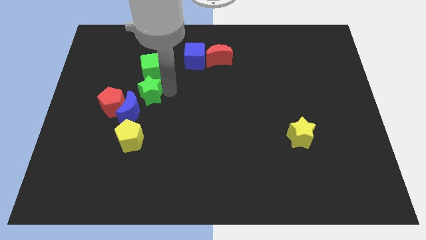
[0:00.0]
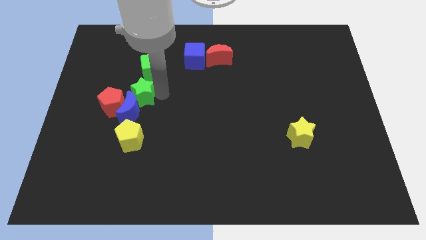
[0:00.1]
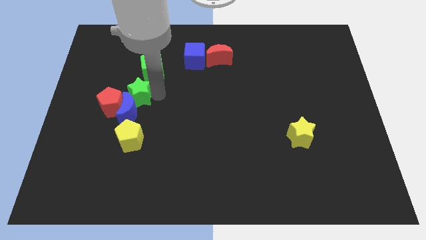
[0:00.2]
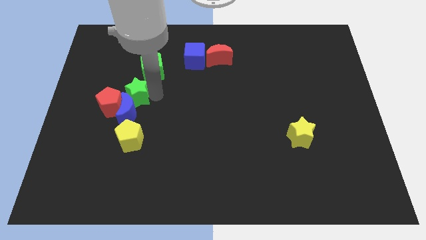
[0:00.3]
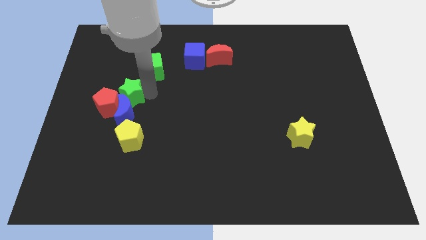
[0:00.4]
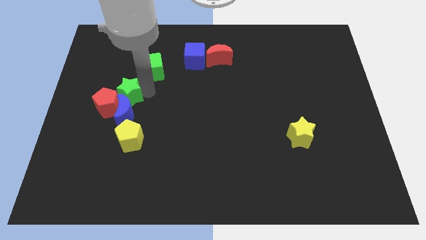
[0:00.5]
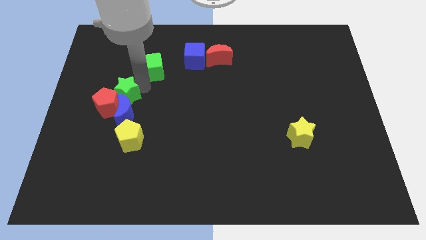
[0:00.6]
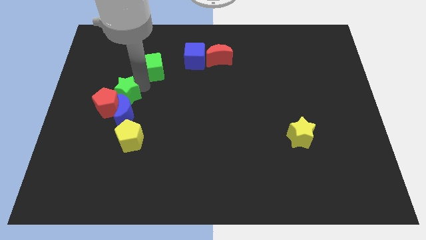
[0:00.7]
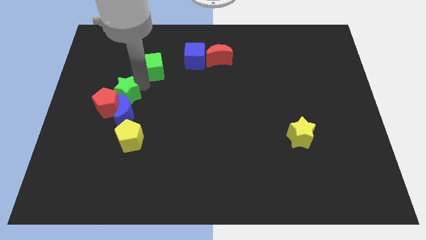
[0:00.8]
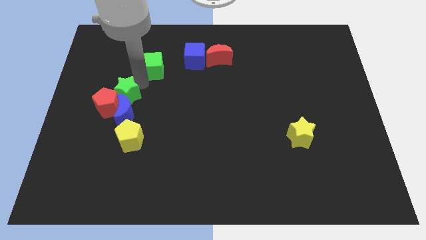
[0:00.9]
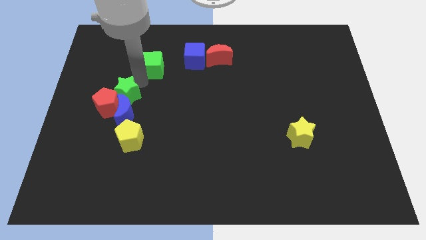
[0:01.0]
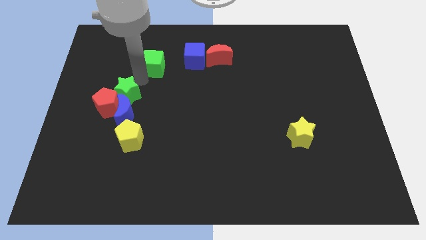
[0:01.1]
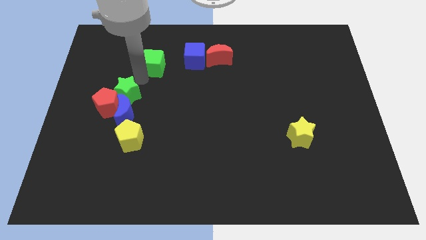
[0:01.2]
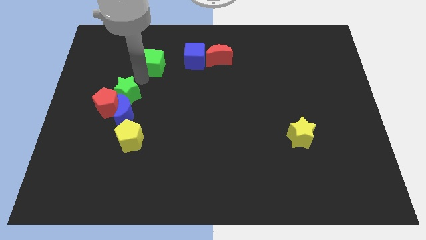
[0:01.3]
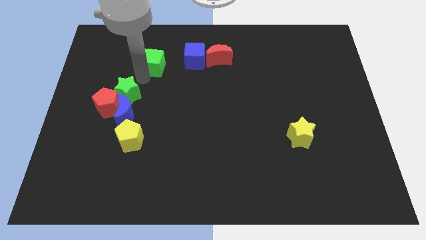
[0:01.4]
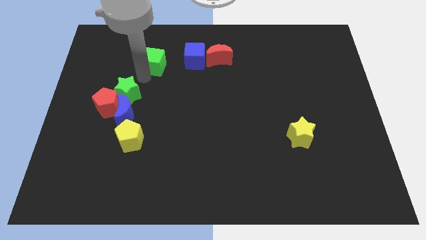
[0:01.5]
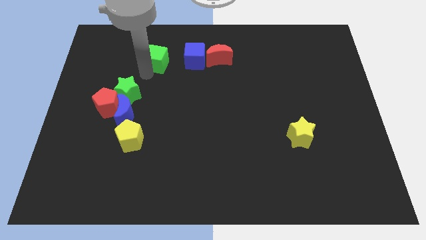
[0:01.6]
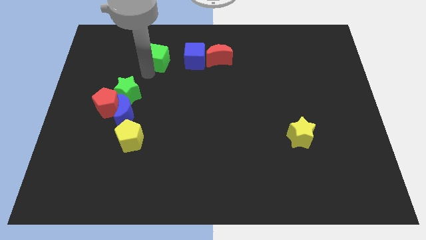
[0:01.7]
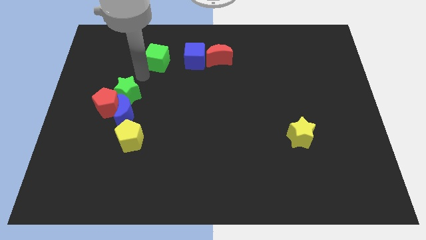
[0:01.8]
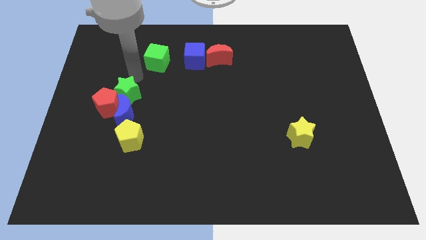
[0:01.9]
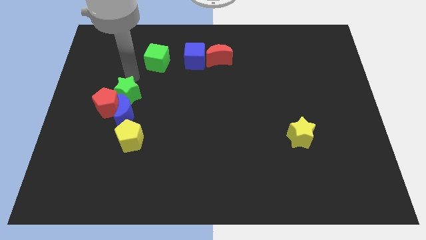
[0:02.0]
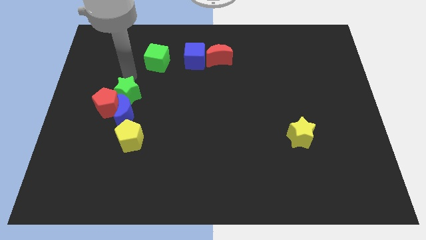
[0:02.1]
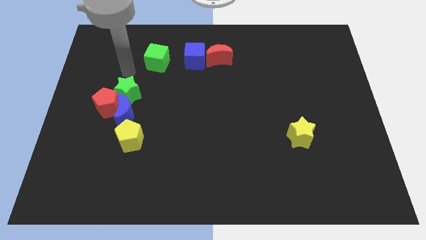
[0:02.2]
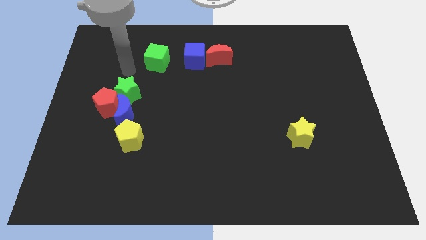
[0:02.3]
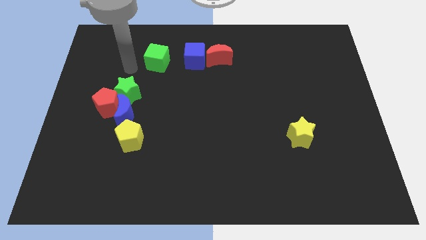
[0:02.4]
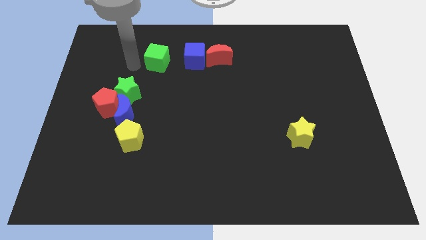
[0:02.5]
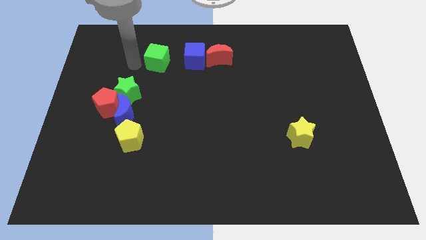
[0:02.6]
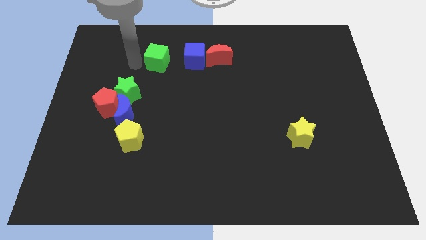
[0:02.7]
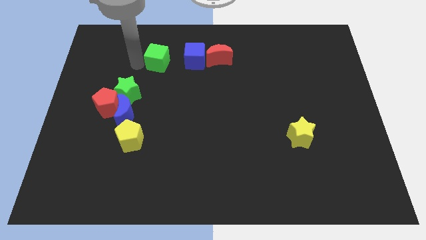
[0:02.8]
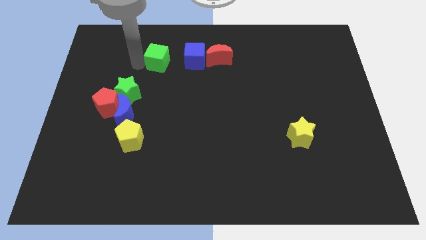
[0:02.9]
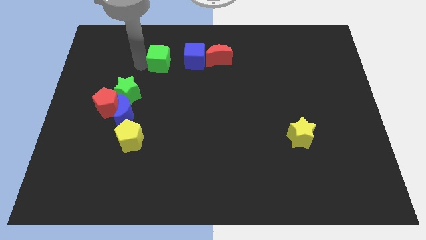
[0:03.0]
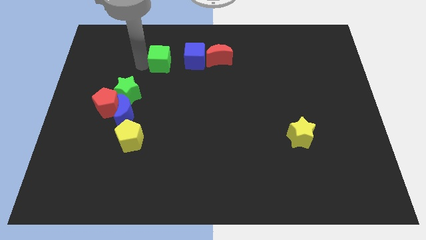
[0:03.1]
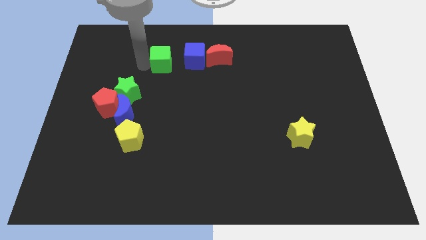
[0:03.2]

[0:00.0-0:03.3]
separate the green star and green cube

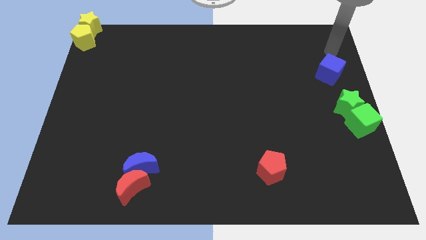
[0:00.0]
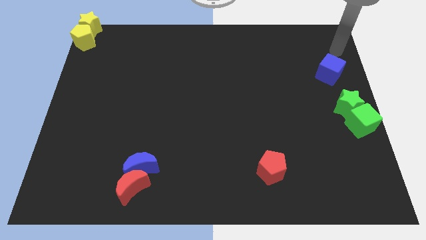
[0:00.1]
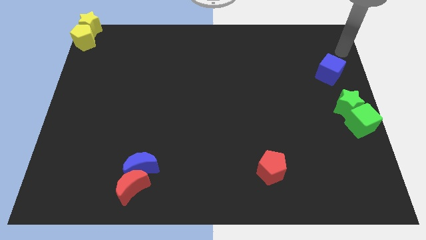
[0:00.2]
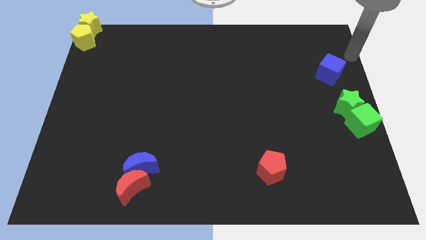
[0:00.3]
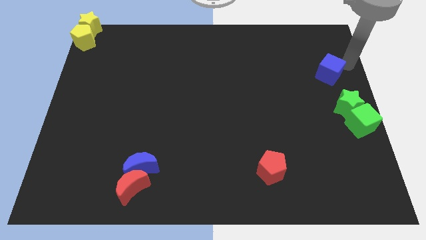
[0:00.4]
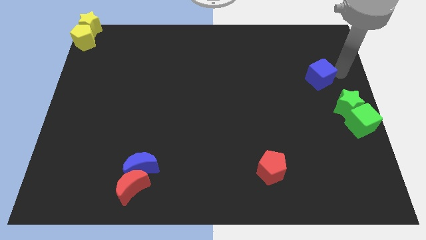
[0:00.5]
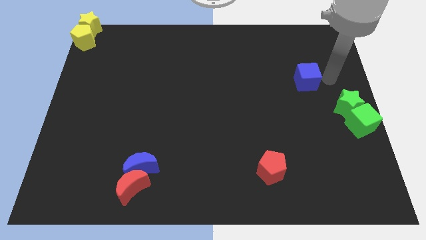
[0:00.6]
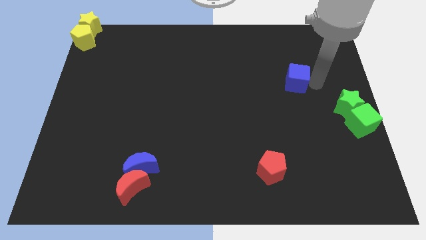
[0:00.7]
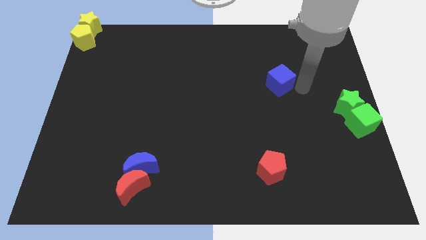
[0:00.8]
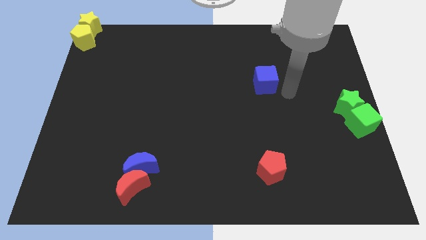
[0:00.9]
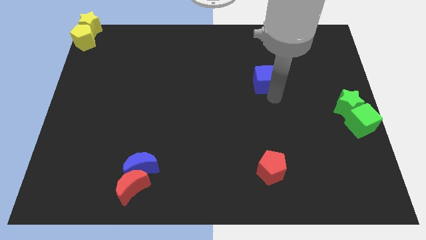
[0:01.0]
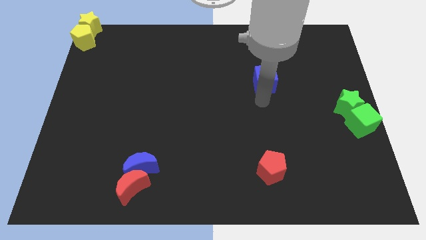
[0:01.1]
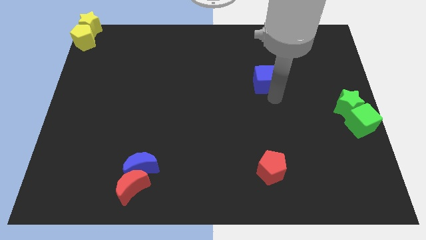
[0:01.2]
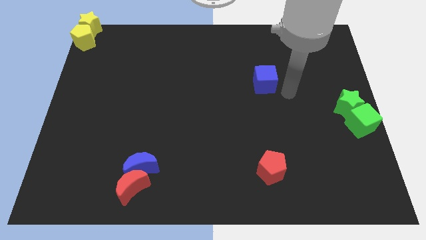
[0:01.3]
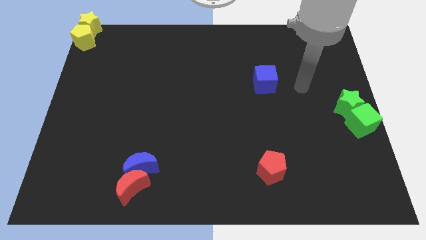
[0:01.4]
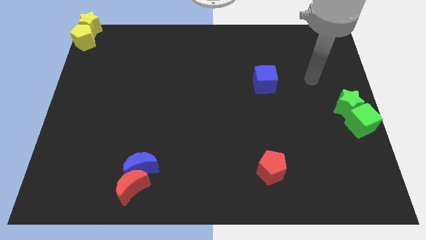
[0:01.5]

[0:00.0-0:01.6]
push blue cube above red pentagon

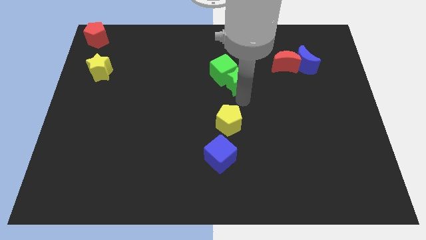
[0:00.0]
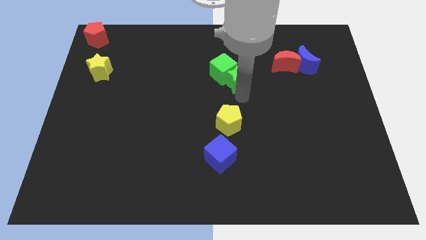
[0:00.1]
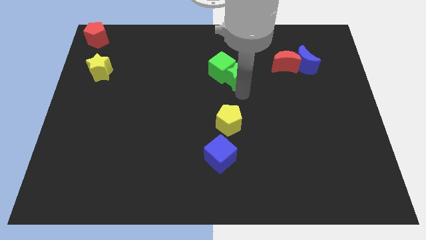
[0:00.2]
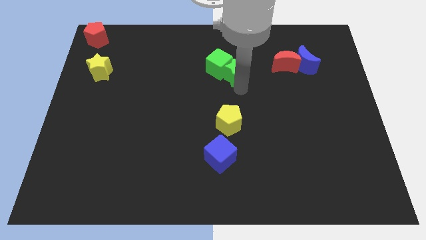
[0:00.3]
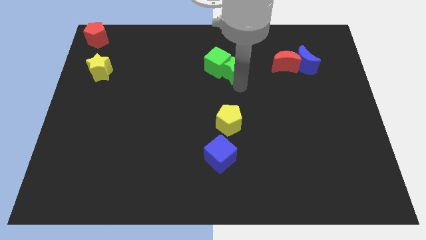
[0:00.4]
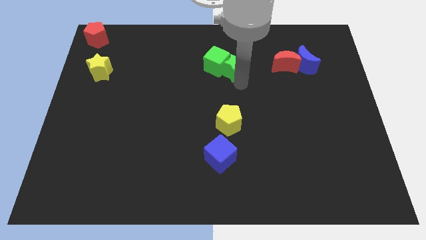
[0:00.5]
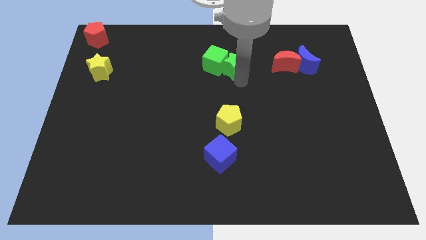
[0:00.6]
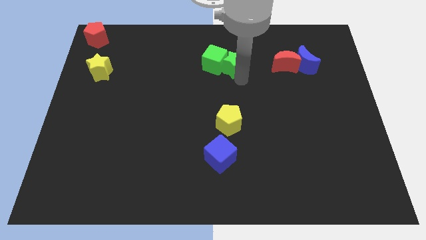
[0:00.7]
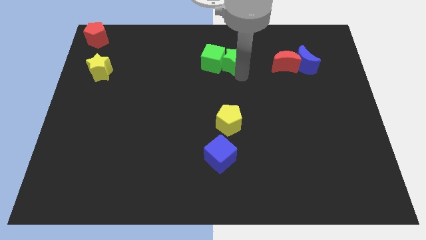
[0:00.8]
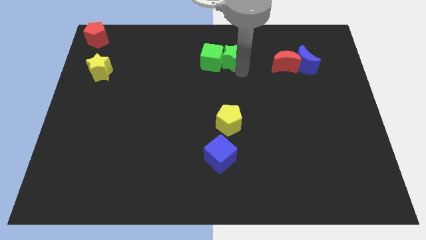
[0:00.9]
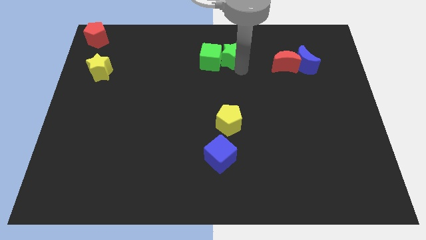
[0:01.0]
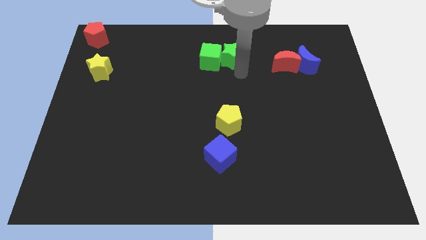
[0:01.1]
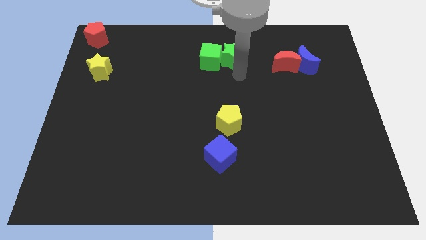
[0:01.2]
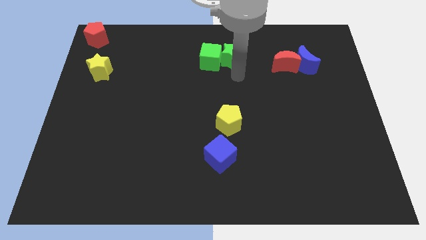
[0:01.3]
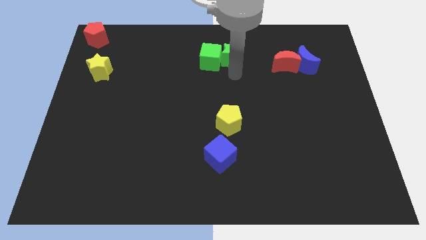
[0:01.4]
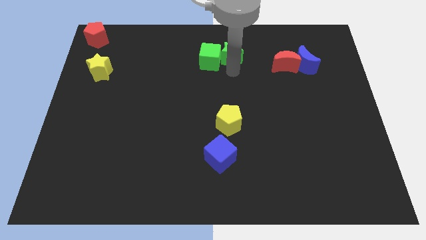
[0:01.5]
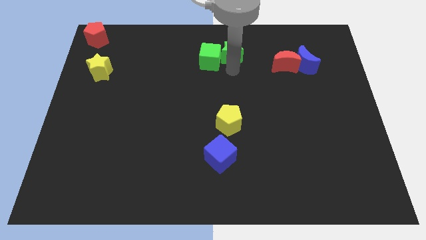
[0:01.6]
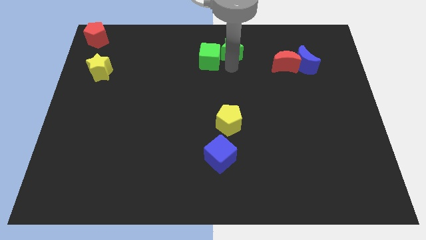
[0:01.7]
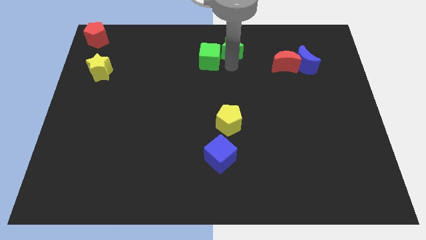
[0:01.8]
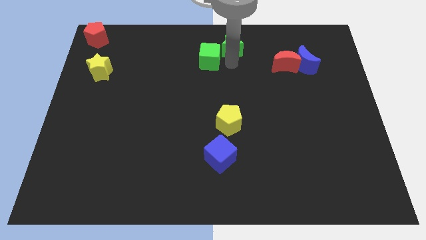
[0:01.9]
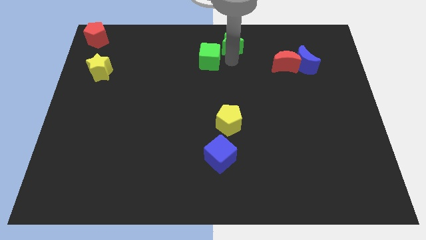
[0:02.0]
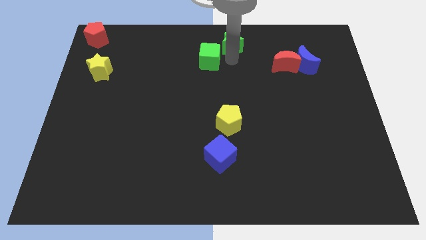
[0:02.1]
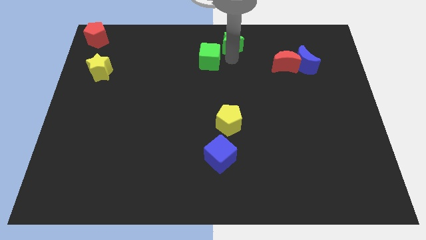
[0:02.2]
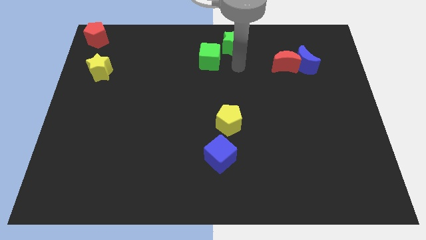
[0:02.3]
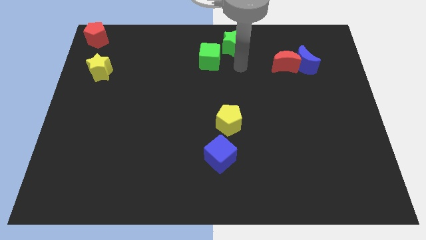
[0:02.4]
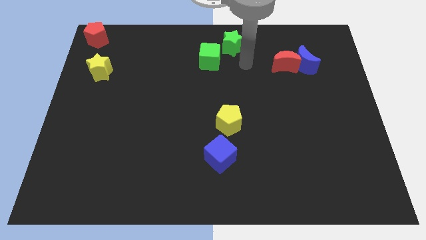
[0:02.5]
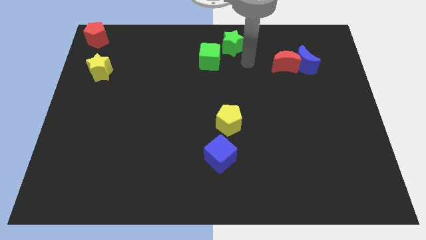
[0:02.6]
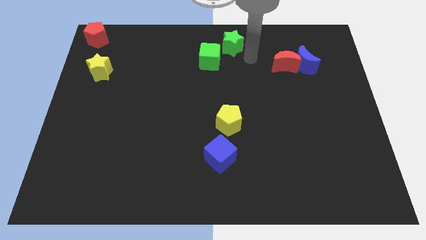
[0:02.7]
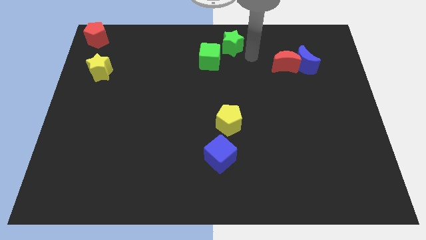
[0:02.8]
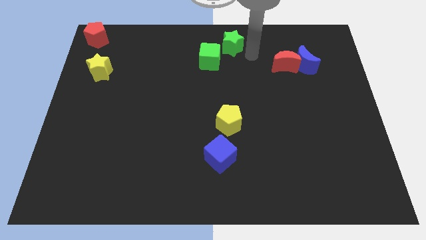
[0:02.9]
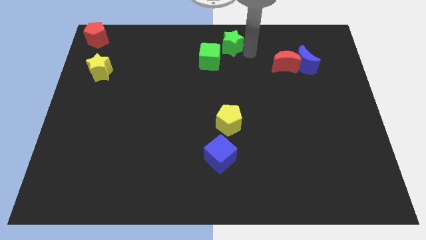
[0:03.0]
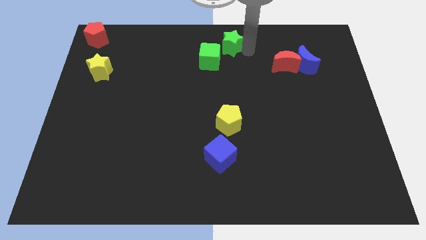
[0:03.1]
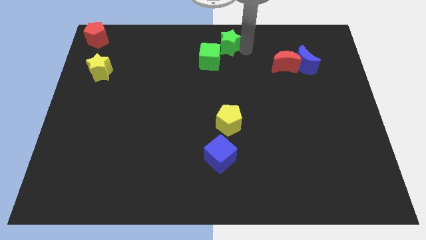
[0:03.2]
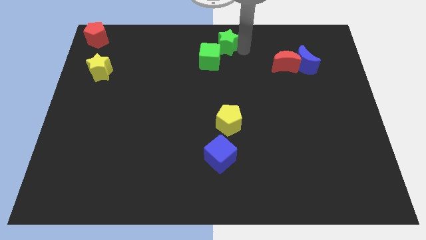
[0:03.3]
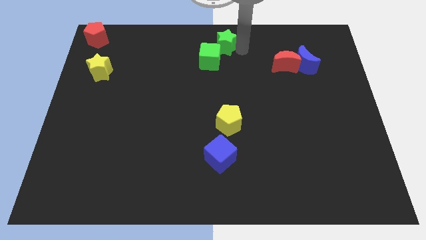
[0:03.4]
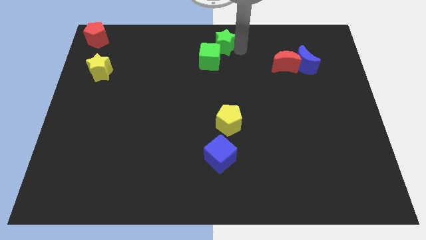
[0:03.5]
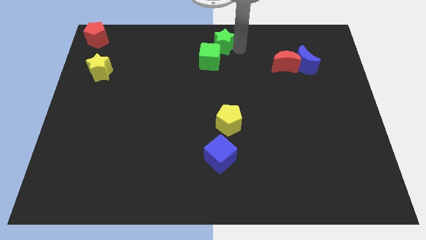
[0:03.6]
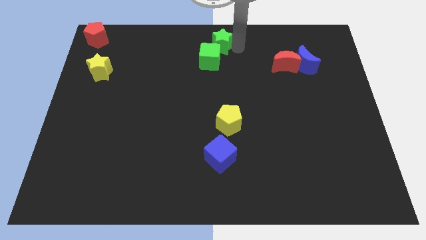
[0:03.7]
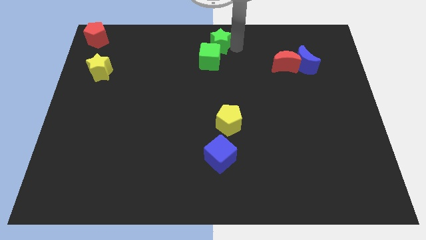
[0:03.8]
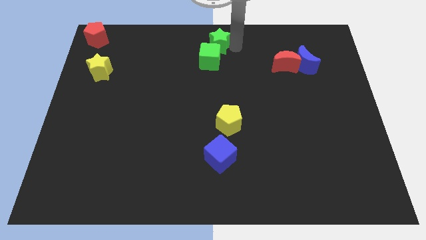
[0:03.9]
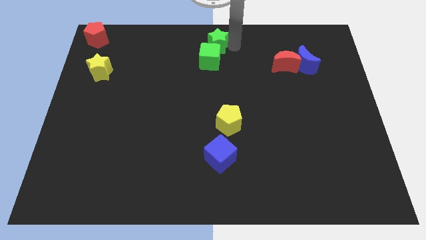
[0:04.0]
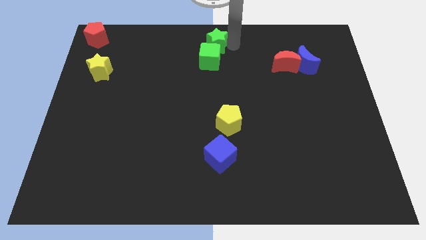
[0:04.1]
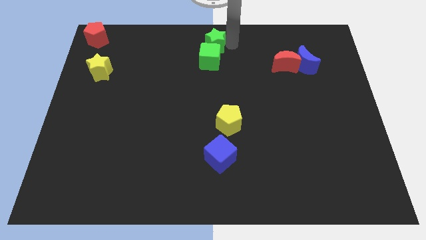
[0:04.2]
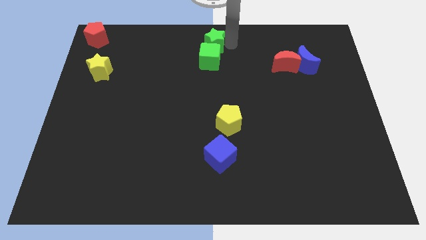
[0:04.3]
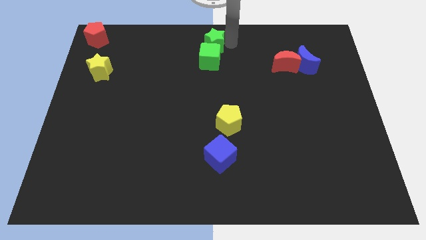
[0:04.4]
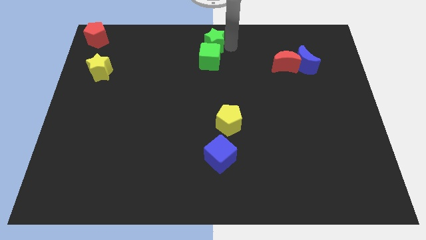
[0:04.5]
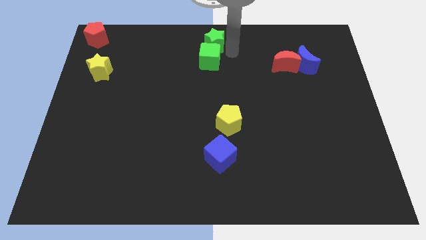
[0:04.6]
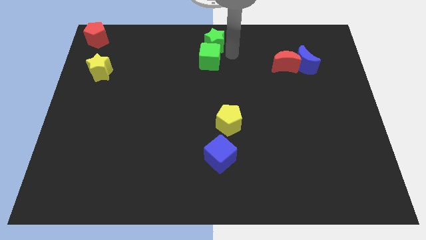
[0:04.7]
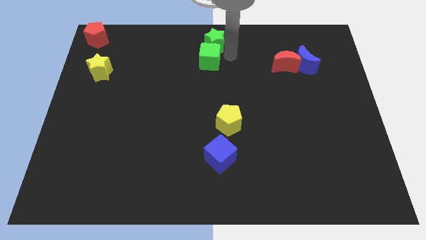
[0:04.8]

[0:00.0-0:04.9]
place the green star above the green cube
